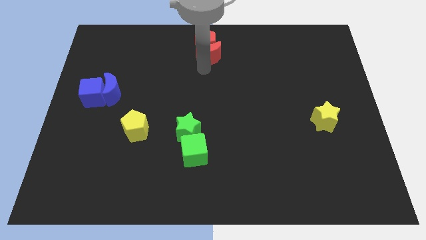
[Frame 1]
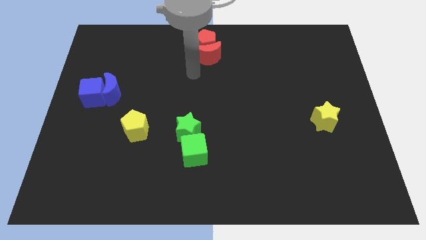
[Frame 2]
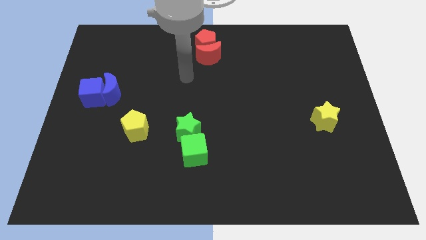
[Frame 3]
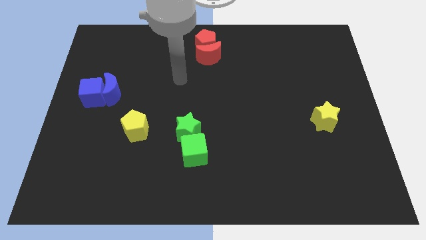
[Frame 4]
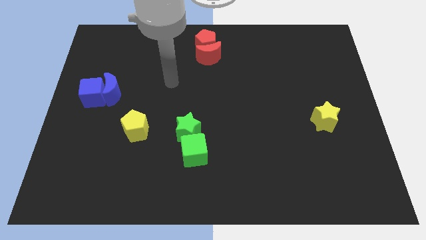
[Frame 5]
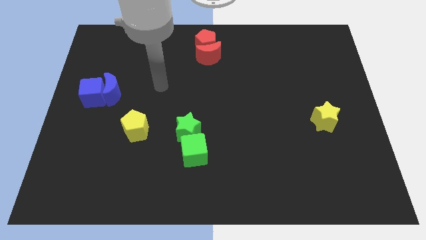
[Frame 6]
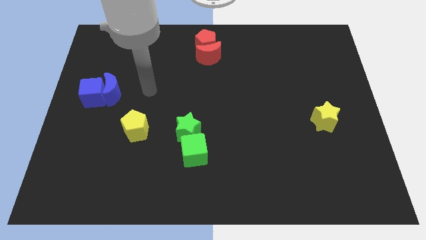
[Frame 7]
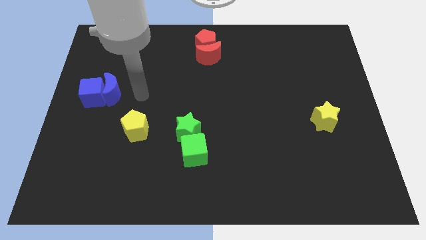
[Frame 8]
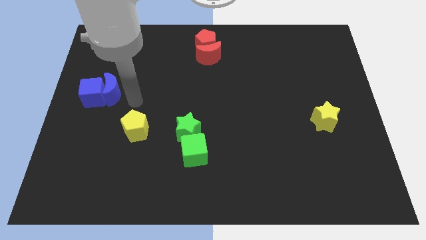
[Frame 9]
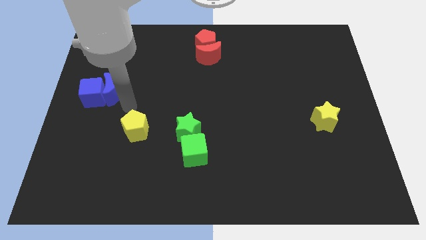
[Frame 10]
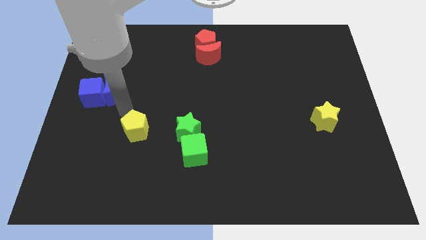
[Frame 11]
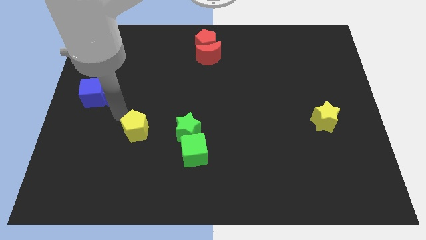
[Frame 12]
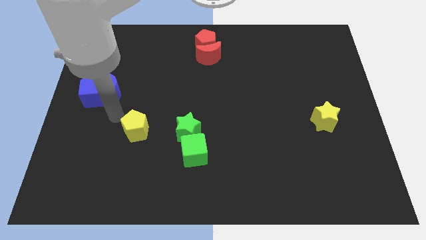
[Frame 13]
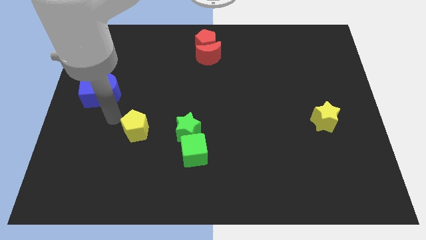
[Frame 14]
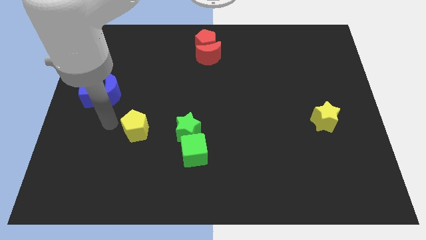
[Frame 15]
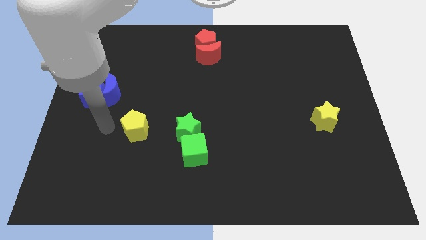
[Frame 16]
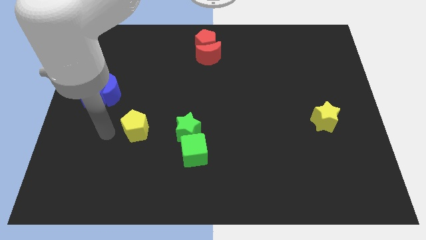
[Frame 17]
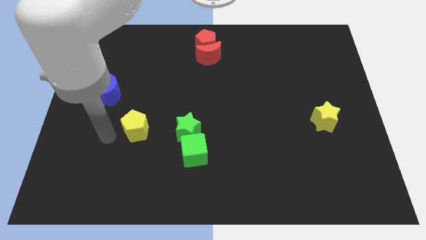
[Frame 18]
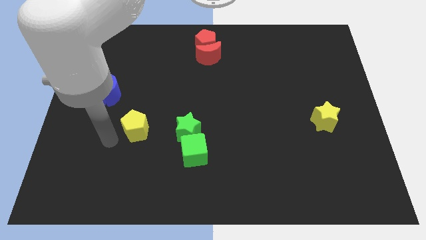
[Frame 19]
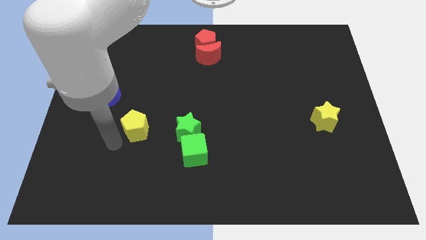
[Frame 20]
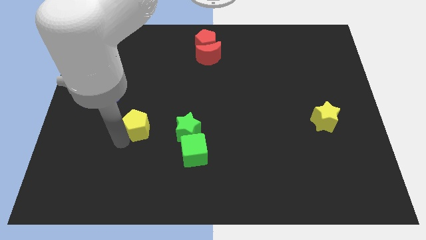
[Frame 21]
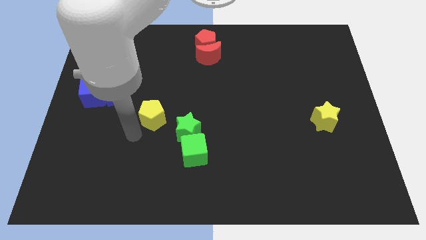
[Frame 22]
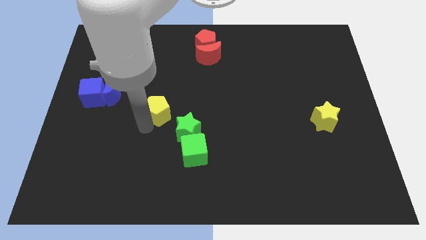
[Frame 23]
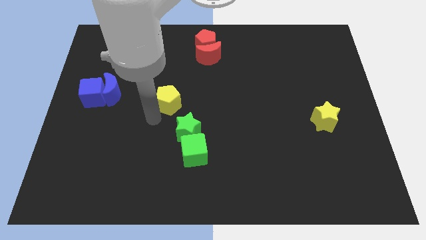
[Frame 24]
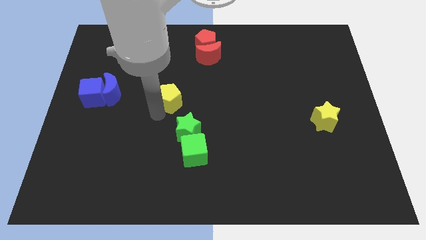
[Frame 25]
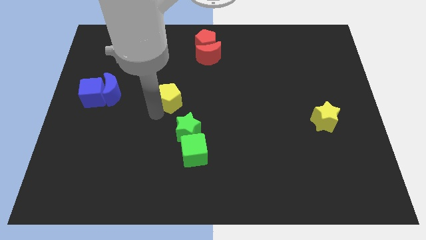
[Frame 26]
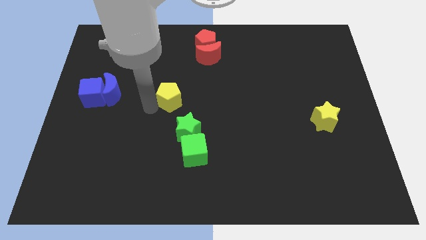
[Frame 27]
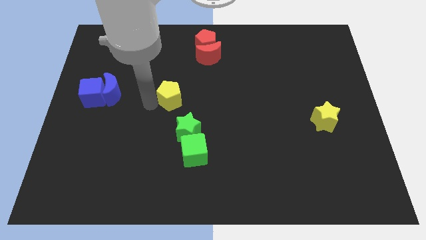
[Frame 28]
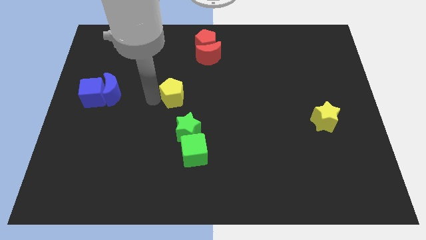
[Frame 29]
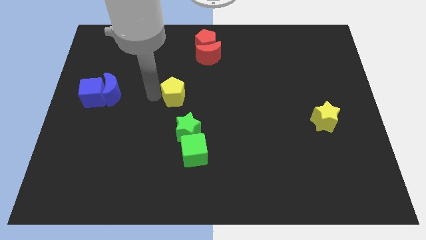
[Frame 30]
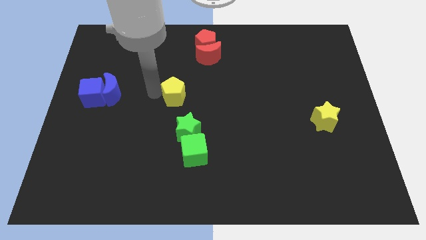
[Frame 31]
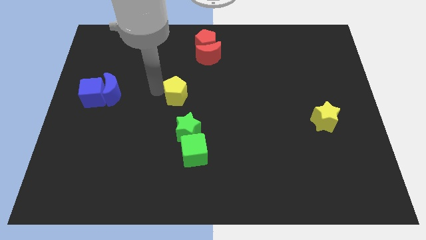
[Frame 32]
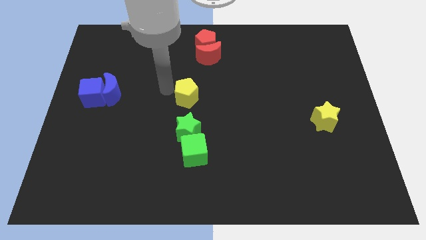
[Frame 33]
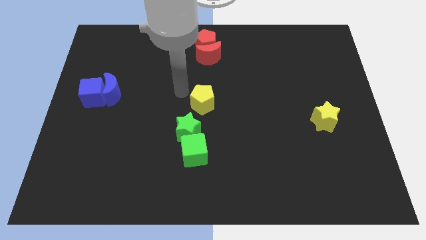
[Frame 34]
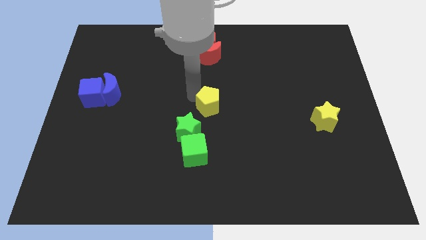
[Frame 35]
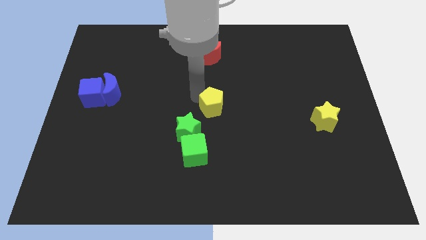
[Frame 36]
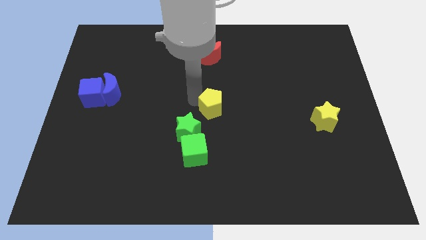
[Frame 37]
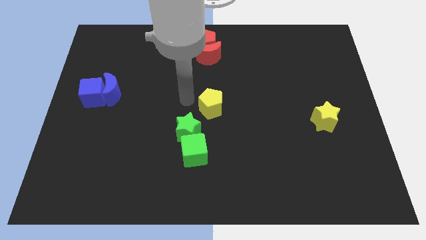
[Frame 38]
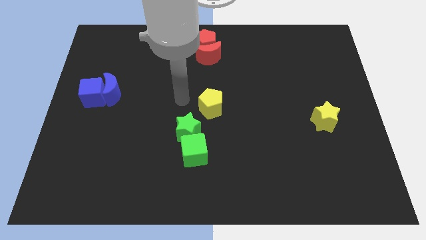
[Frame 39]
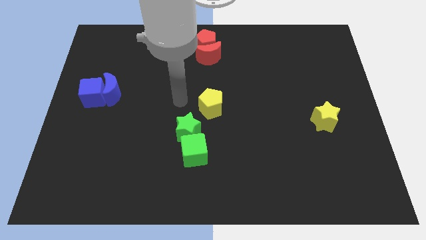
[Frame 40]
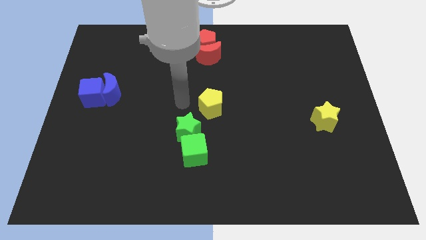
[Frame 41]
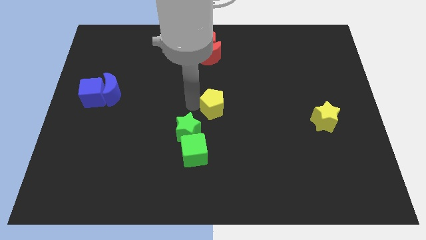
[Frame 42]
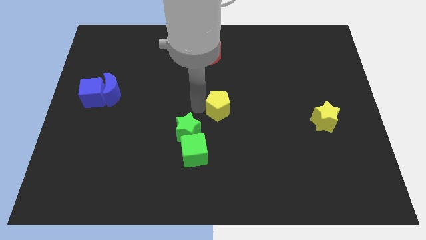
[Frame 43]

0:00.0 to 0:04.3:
move the yellow pentagon to the center of the board

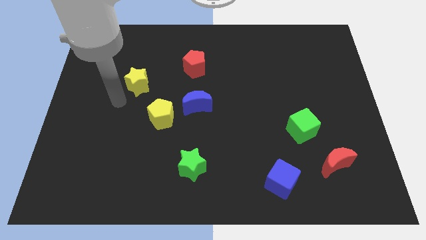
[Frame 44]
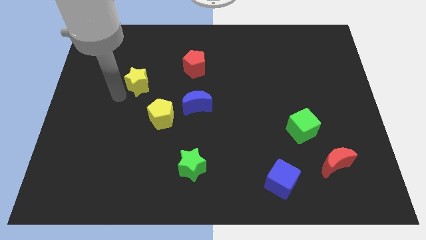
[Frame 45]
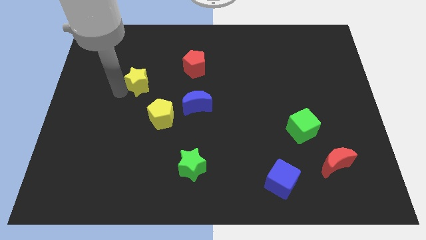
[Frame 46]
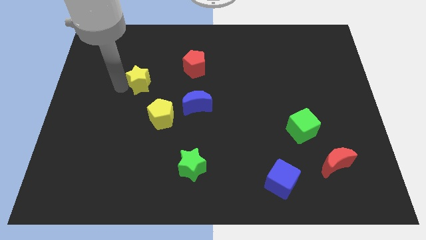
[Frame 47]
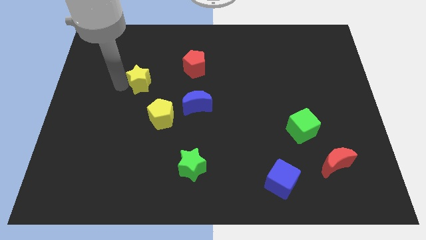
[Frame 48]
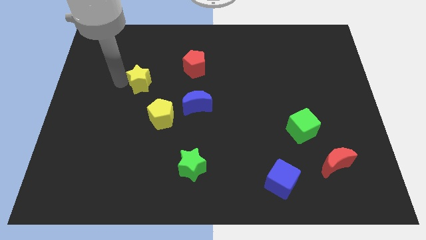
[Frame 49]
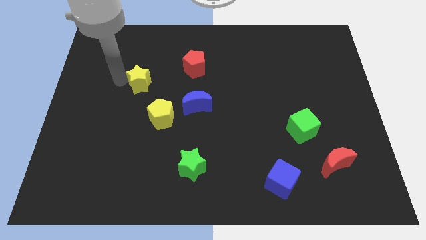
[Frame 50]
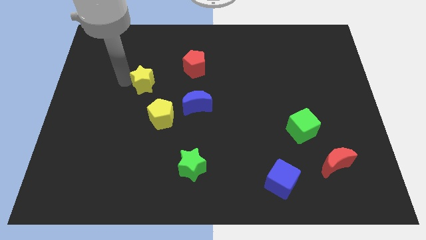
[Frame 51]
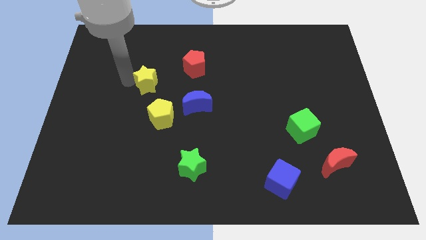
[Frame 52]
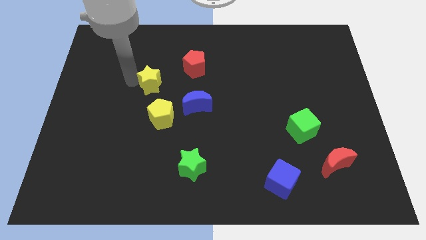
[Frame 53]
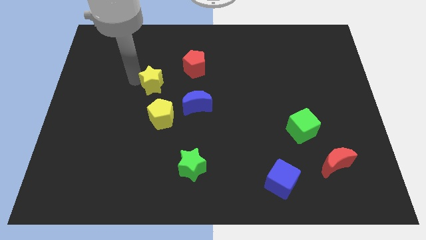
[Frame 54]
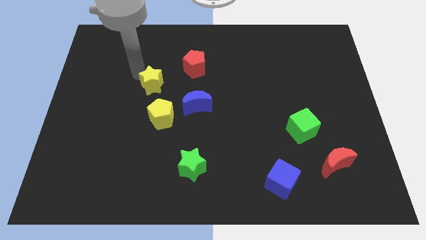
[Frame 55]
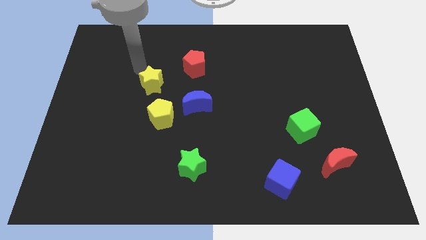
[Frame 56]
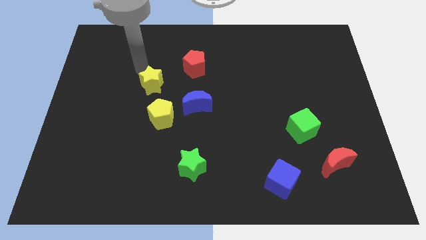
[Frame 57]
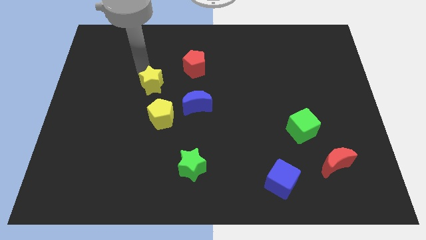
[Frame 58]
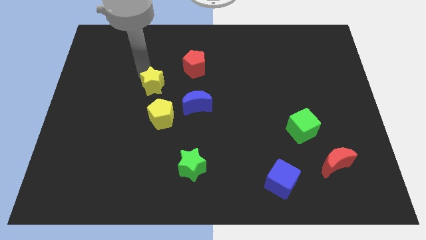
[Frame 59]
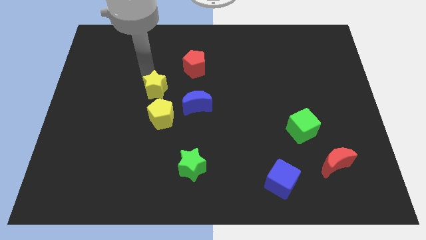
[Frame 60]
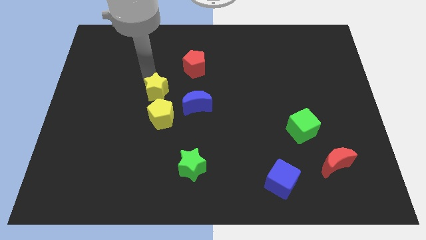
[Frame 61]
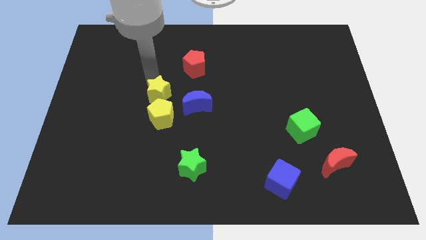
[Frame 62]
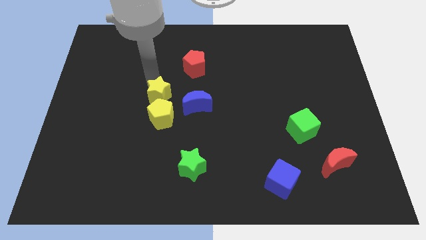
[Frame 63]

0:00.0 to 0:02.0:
place the yellow star above the yellow pentagon

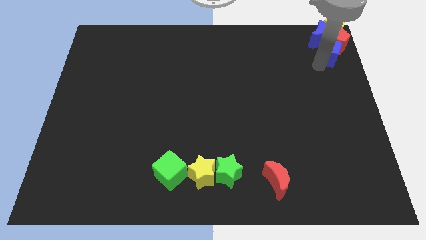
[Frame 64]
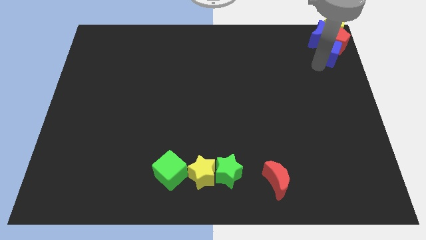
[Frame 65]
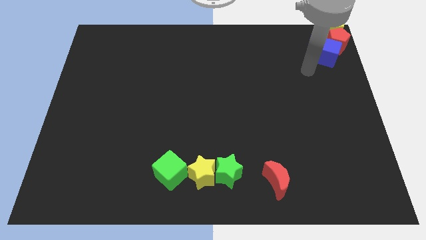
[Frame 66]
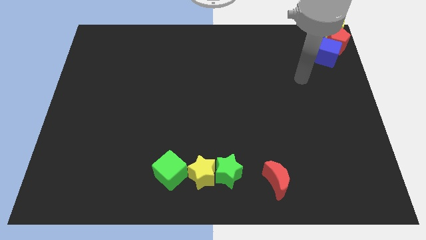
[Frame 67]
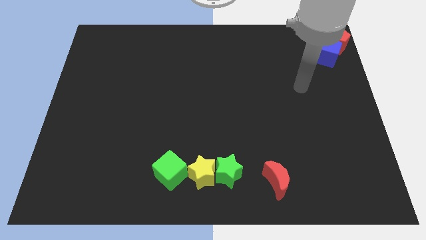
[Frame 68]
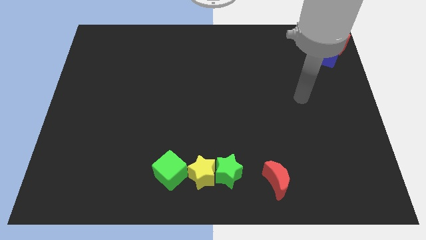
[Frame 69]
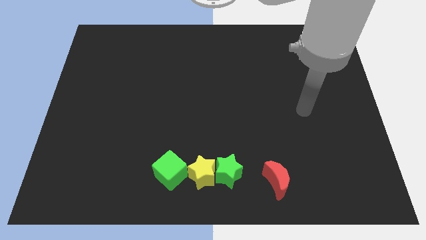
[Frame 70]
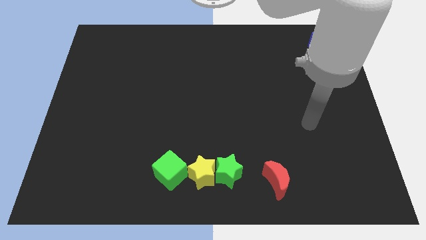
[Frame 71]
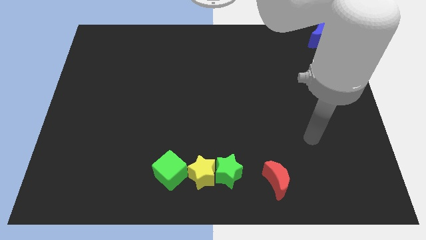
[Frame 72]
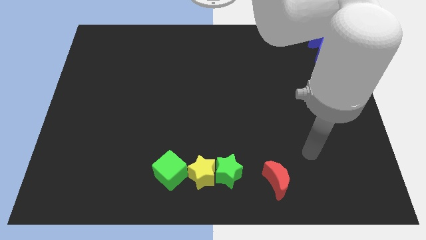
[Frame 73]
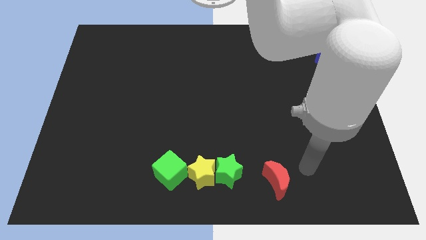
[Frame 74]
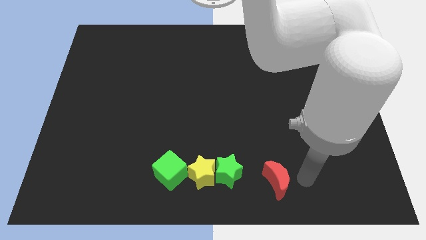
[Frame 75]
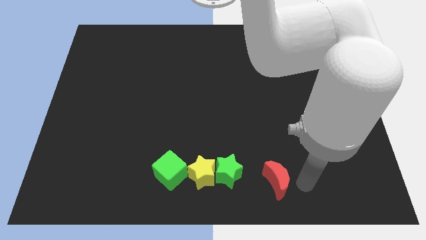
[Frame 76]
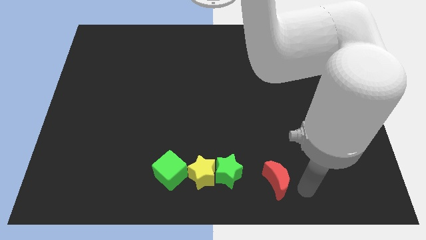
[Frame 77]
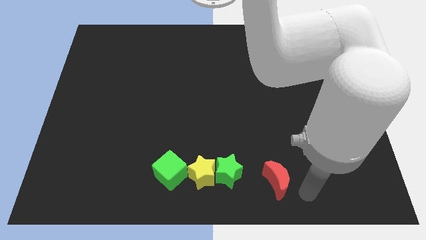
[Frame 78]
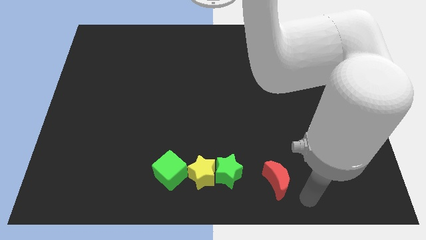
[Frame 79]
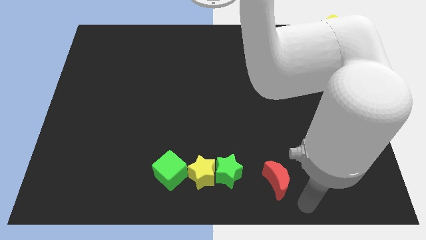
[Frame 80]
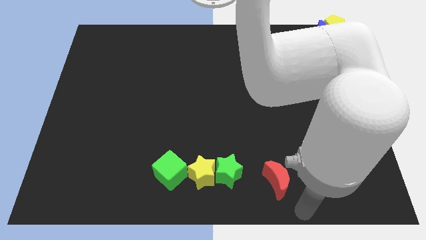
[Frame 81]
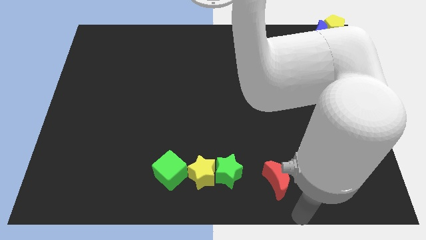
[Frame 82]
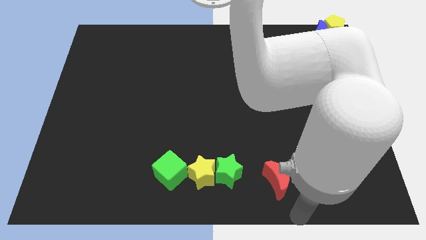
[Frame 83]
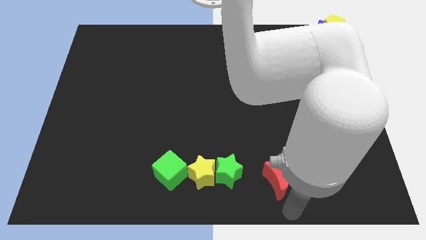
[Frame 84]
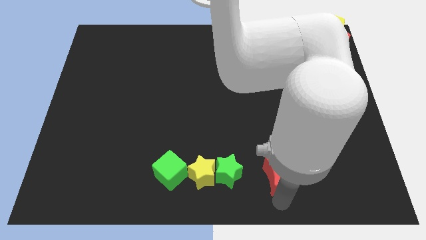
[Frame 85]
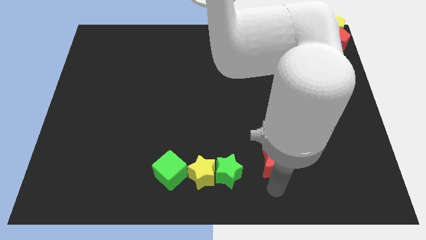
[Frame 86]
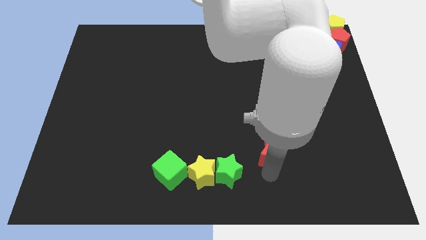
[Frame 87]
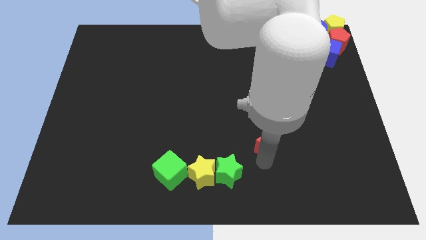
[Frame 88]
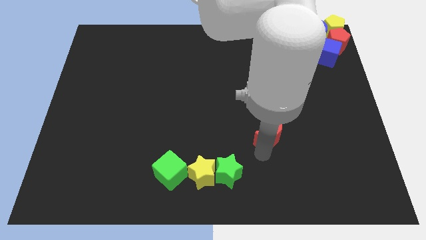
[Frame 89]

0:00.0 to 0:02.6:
place the red moon diagonal to the green star
